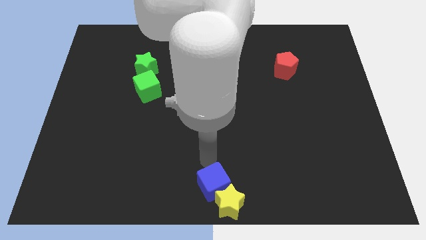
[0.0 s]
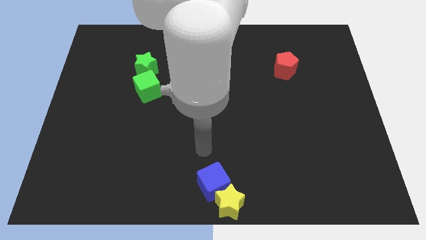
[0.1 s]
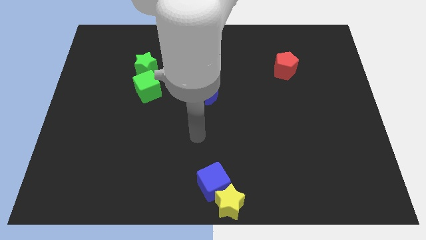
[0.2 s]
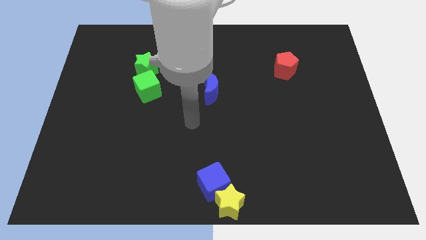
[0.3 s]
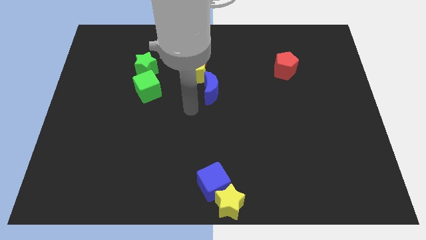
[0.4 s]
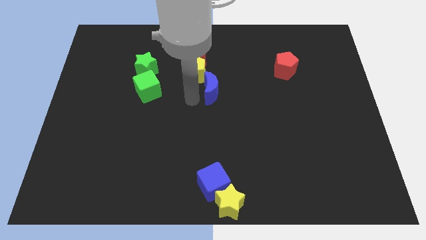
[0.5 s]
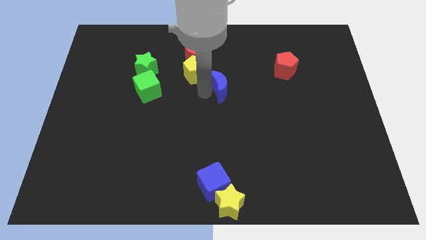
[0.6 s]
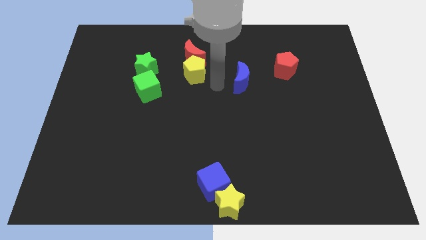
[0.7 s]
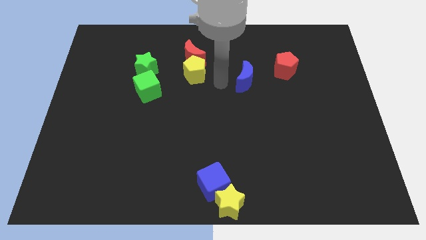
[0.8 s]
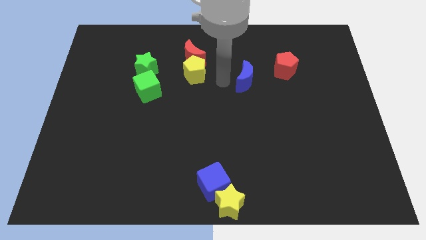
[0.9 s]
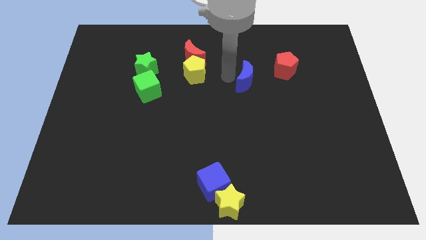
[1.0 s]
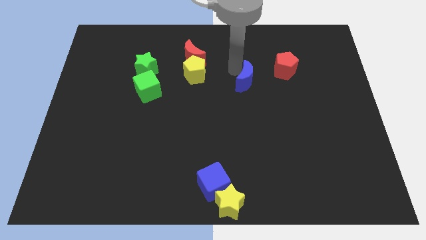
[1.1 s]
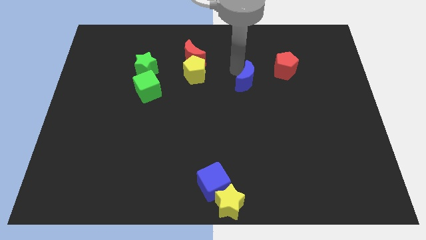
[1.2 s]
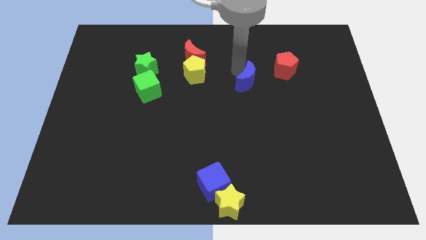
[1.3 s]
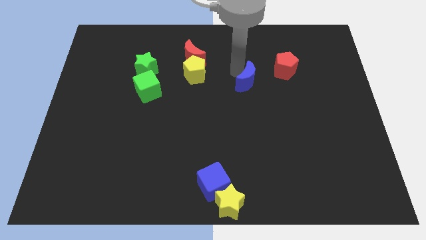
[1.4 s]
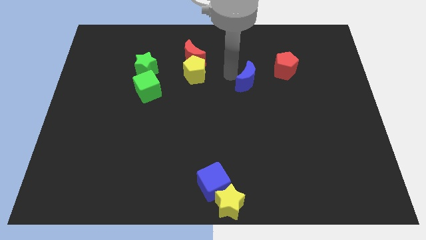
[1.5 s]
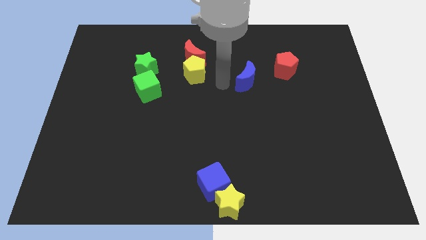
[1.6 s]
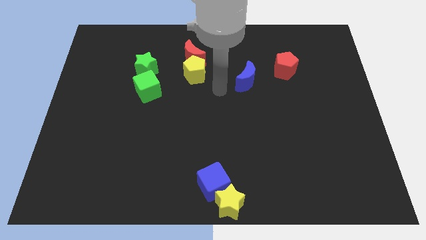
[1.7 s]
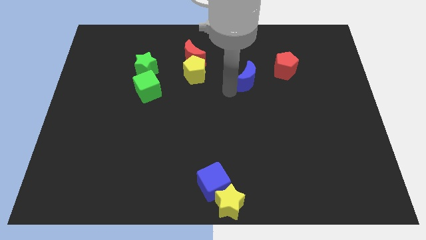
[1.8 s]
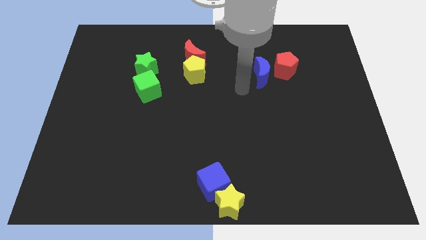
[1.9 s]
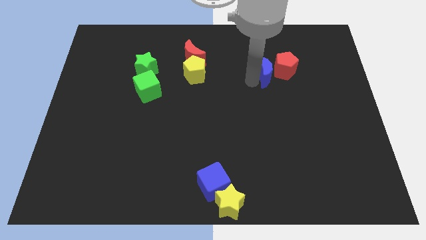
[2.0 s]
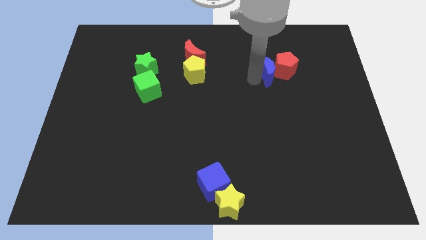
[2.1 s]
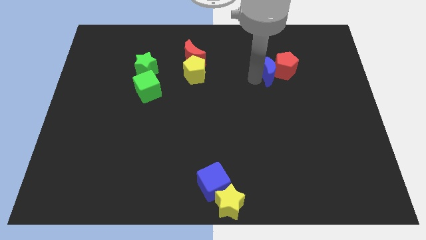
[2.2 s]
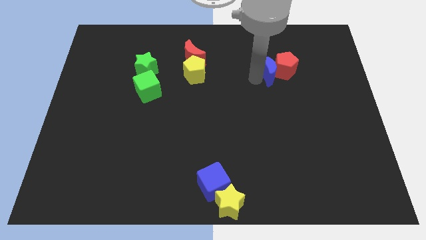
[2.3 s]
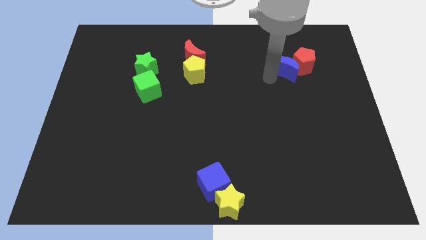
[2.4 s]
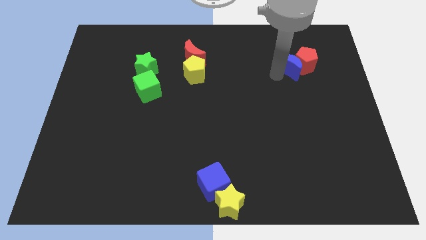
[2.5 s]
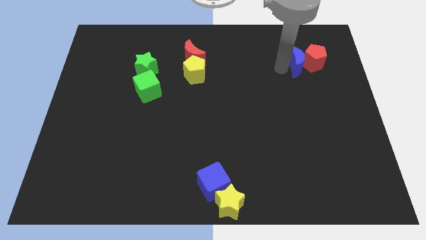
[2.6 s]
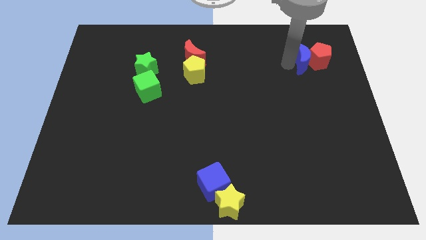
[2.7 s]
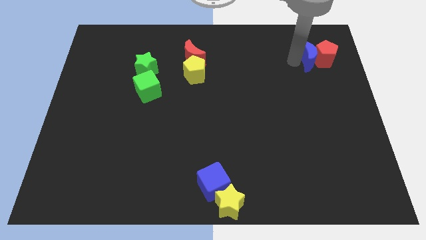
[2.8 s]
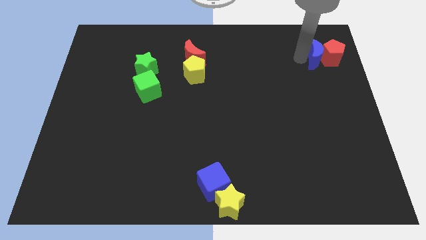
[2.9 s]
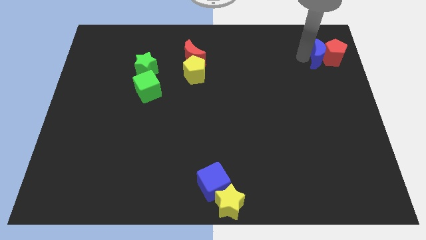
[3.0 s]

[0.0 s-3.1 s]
push the blue moon into the red pentagon

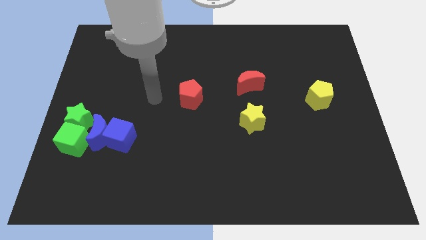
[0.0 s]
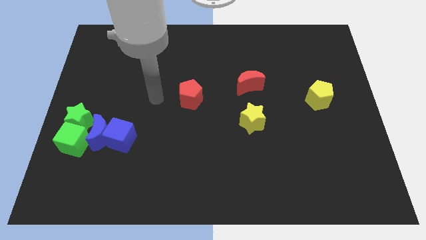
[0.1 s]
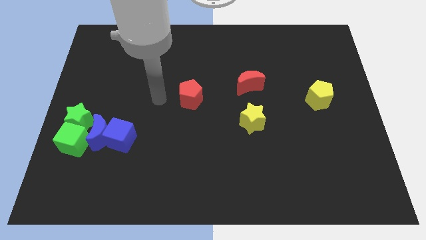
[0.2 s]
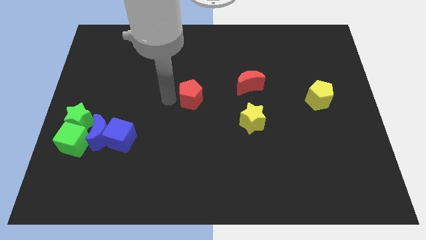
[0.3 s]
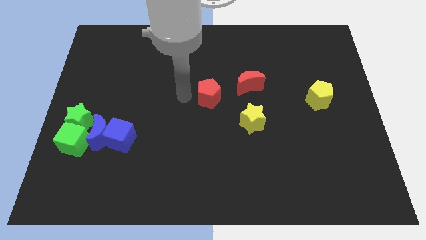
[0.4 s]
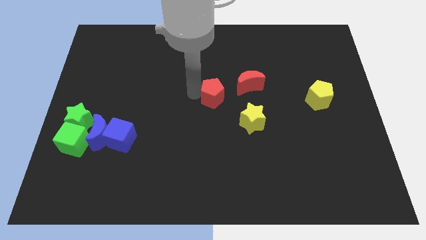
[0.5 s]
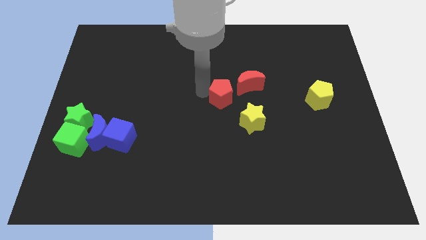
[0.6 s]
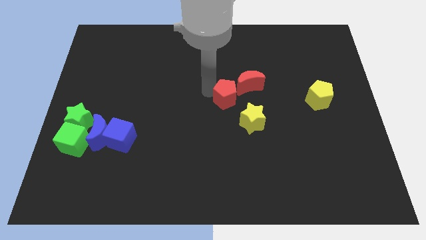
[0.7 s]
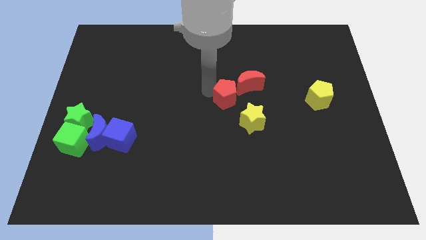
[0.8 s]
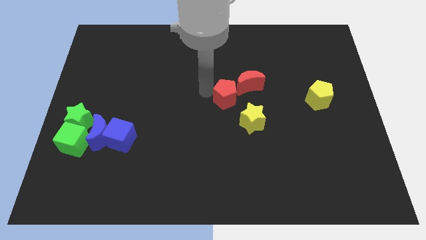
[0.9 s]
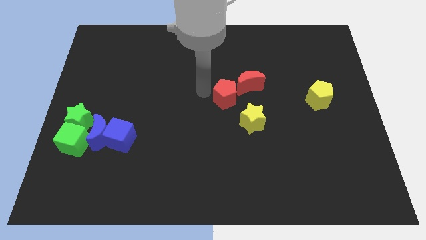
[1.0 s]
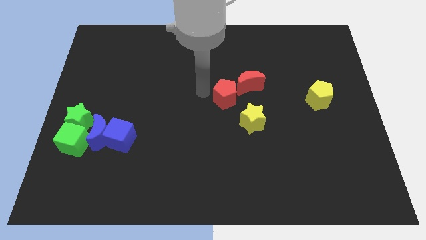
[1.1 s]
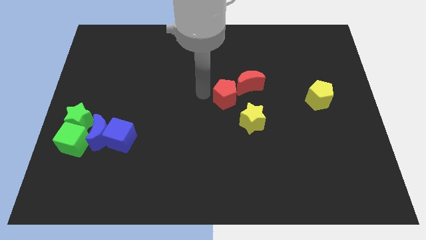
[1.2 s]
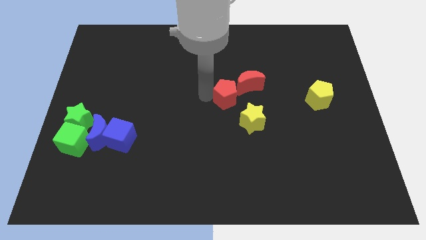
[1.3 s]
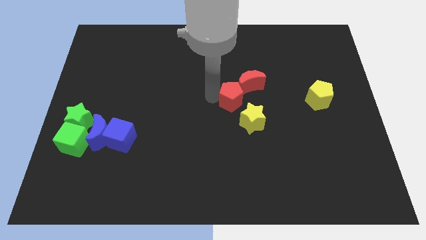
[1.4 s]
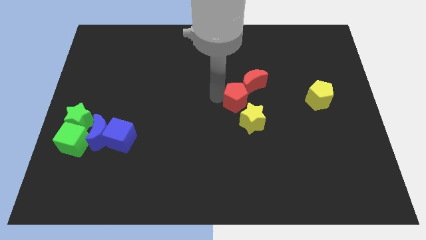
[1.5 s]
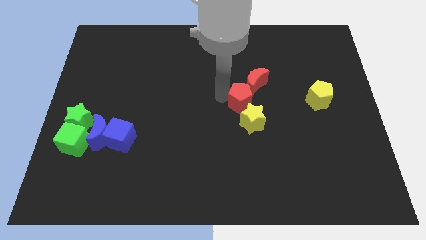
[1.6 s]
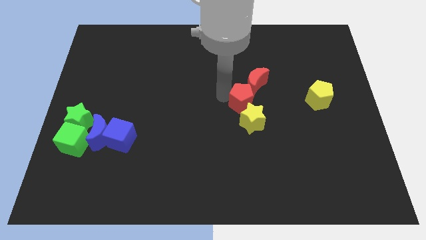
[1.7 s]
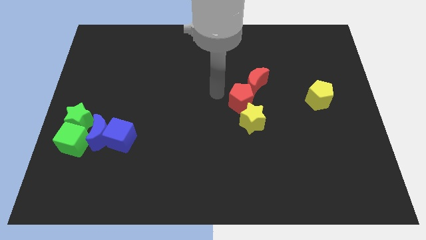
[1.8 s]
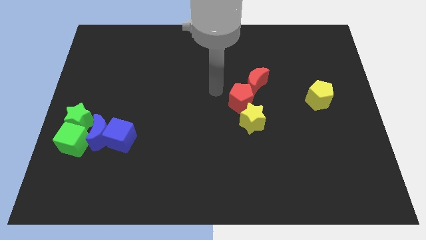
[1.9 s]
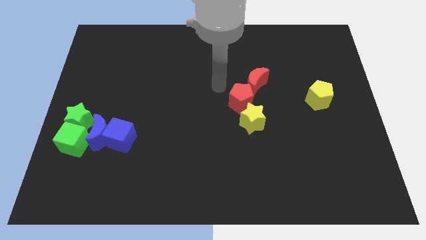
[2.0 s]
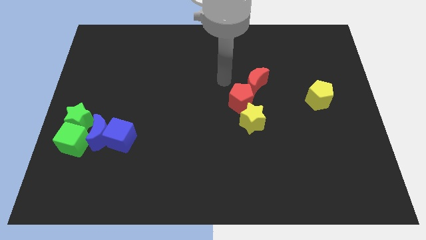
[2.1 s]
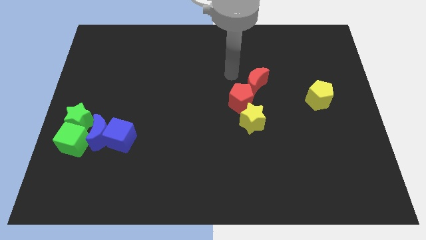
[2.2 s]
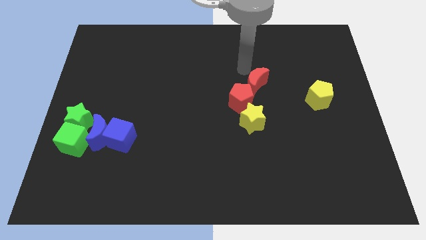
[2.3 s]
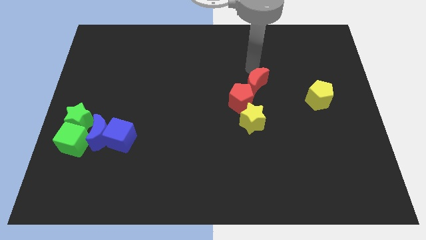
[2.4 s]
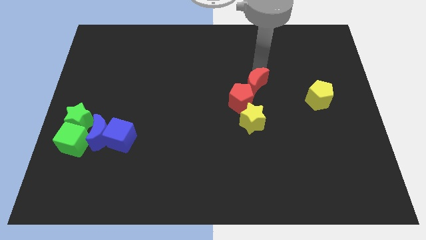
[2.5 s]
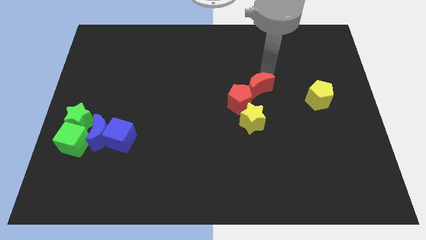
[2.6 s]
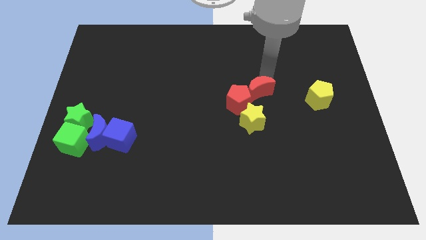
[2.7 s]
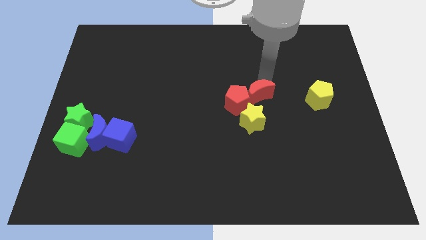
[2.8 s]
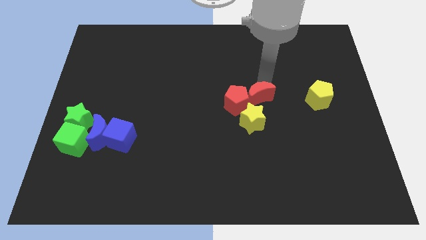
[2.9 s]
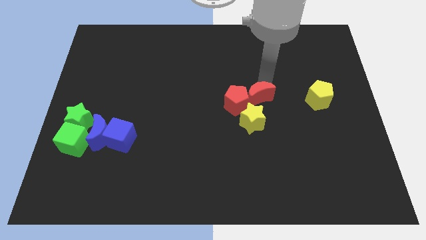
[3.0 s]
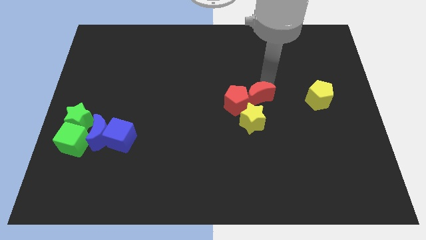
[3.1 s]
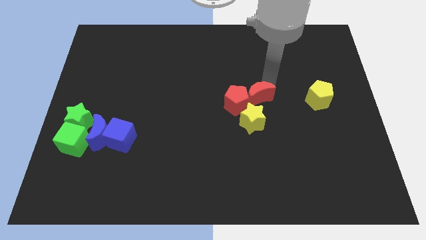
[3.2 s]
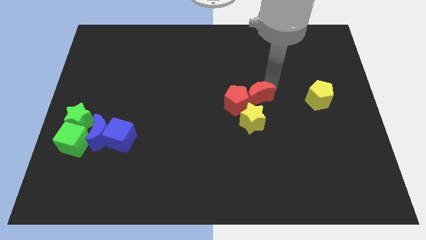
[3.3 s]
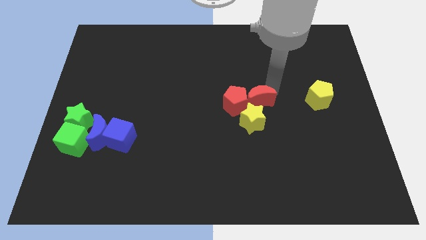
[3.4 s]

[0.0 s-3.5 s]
move the red pentagon and red crescent to the top of the yellow star

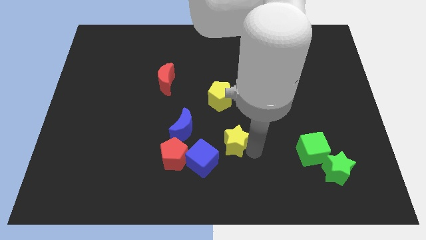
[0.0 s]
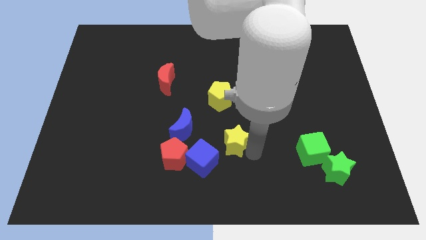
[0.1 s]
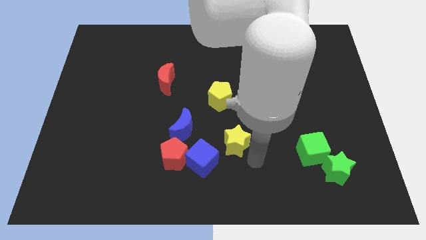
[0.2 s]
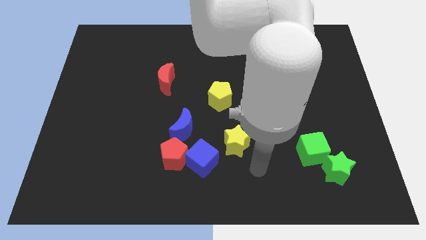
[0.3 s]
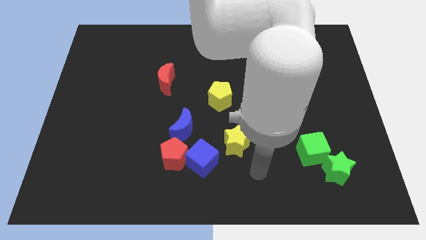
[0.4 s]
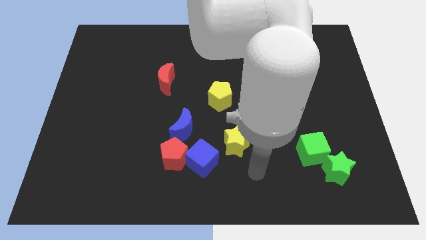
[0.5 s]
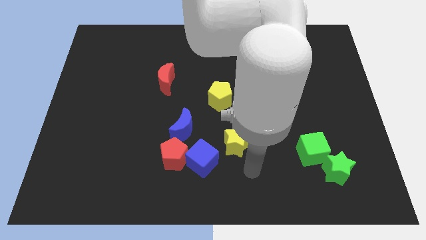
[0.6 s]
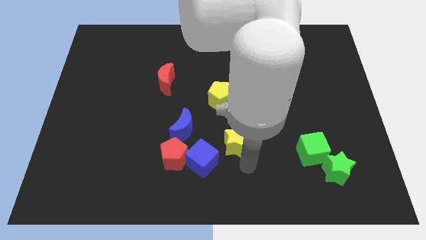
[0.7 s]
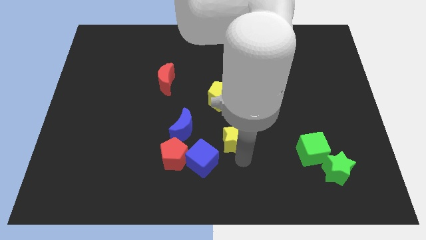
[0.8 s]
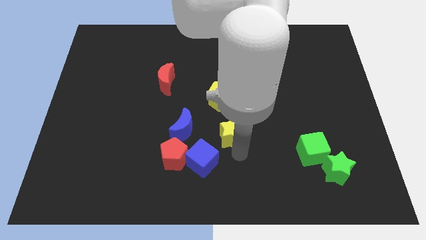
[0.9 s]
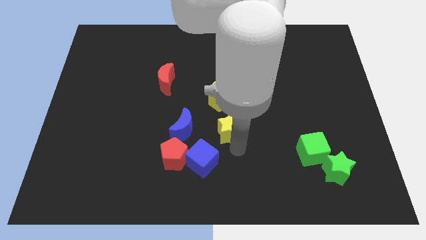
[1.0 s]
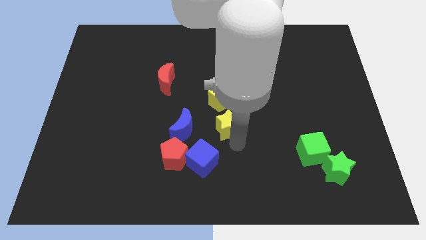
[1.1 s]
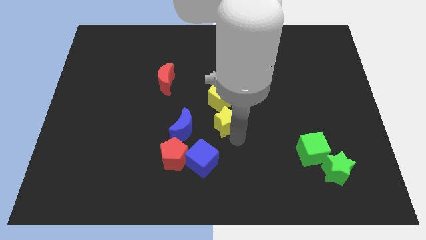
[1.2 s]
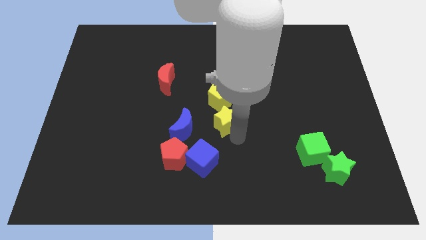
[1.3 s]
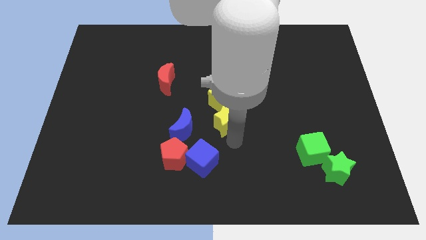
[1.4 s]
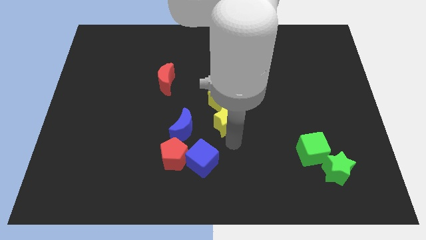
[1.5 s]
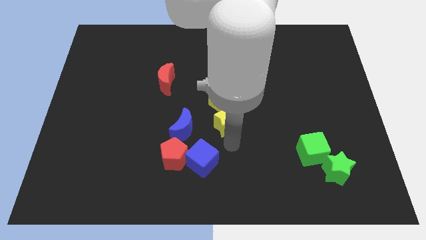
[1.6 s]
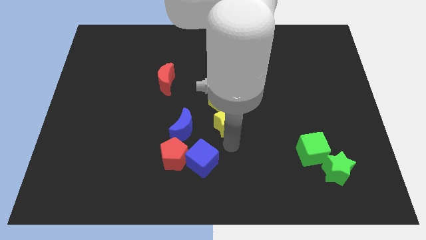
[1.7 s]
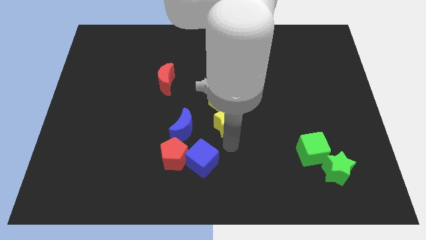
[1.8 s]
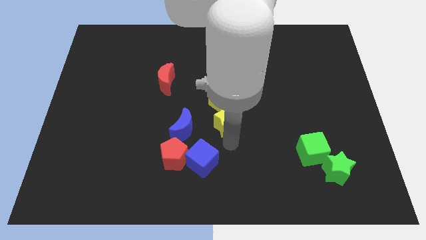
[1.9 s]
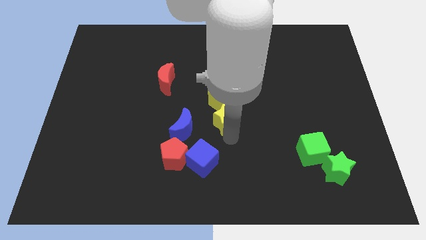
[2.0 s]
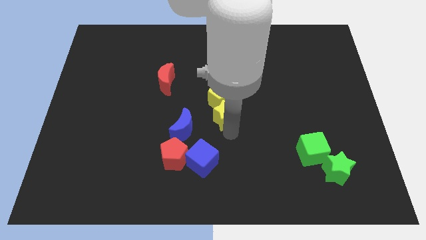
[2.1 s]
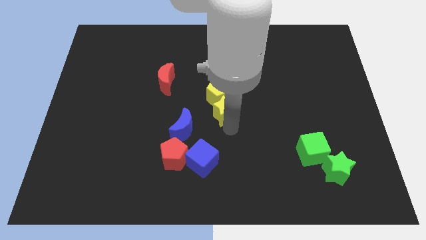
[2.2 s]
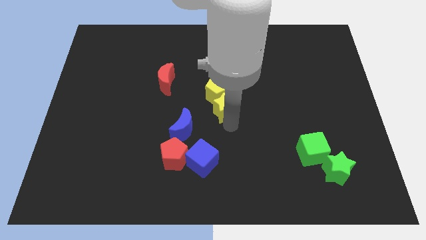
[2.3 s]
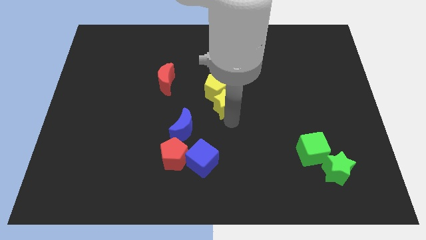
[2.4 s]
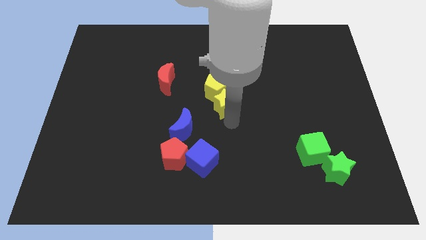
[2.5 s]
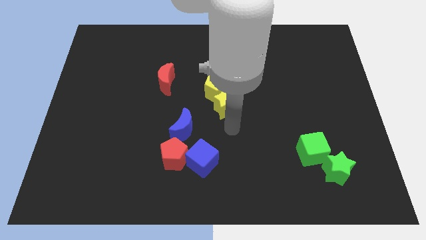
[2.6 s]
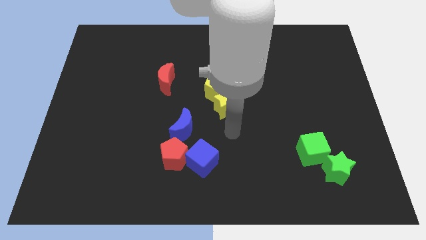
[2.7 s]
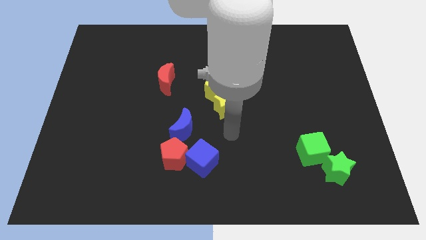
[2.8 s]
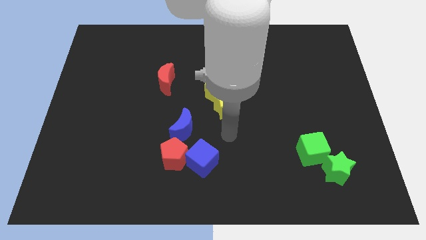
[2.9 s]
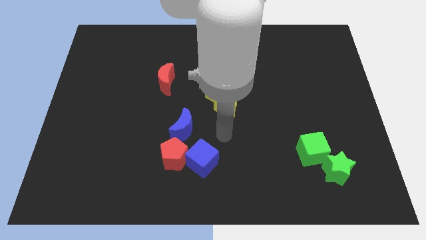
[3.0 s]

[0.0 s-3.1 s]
slightly push yellow star with yellow pentagon to the center
